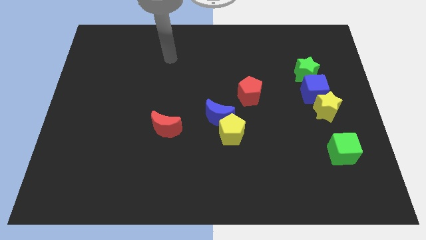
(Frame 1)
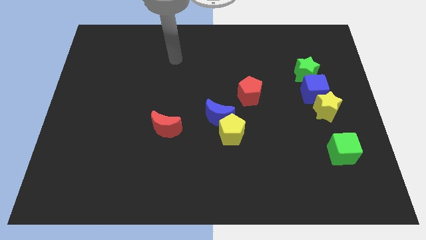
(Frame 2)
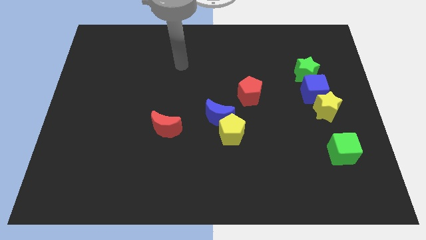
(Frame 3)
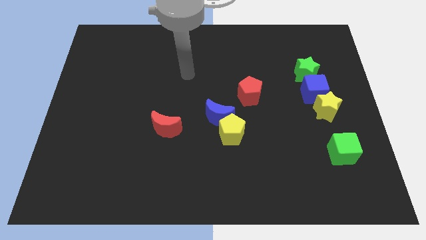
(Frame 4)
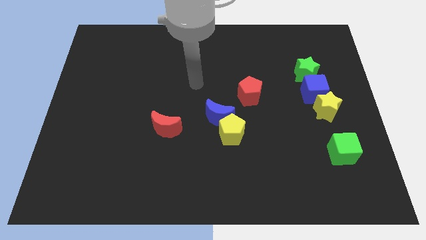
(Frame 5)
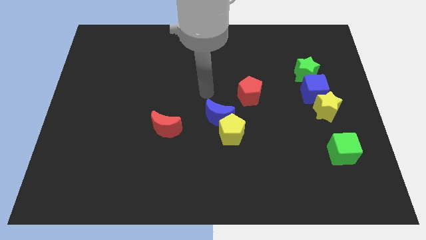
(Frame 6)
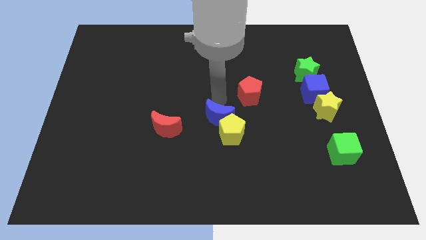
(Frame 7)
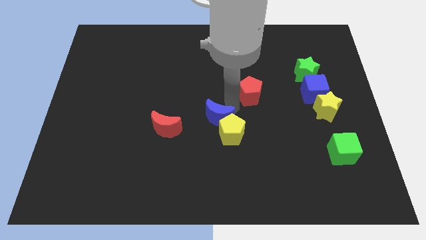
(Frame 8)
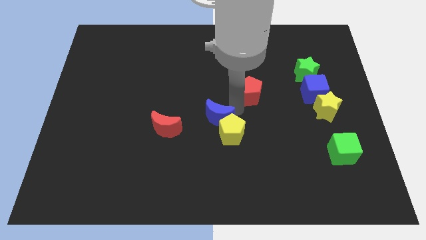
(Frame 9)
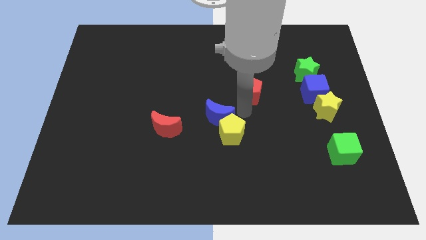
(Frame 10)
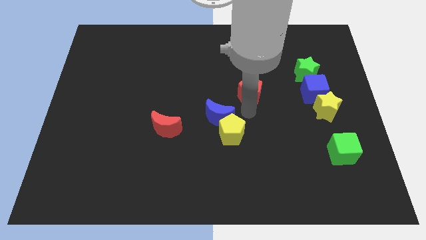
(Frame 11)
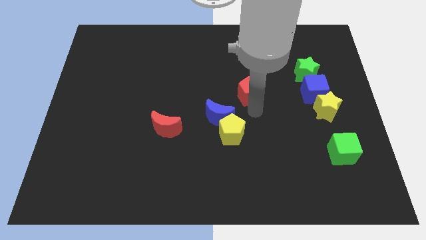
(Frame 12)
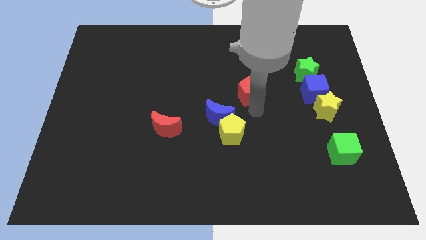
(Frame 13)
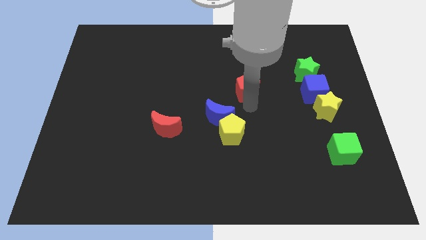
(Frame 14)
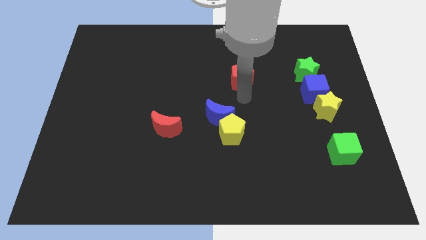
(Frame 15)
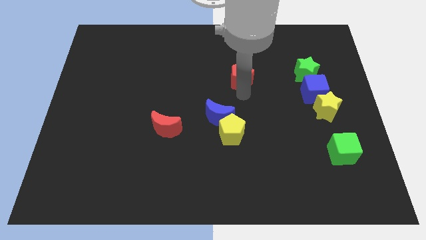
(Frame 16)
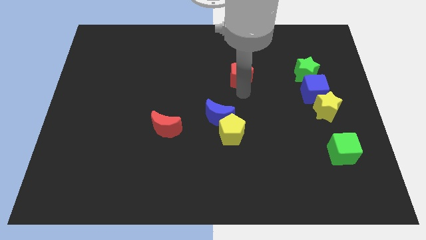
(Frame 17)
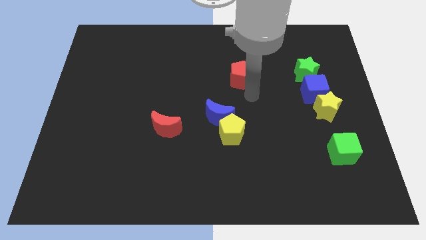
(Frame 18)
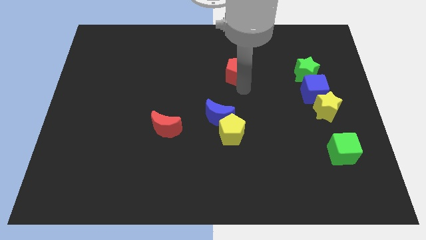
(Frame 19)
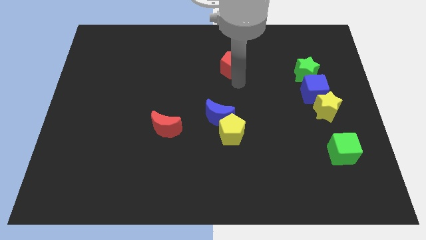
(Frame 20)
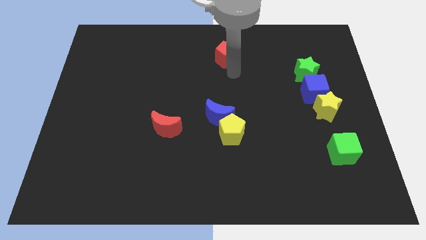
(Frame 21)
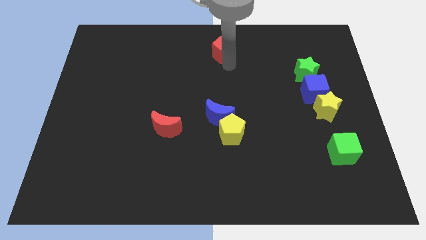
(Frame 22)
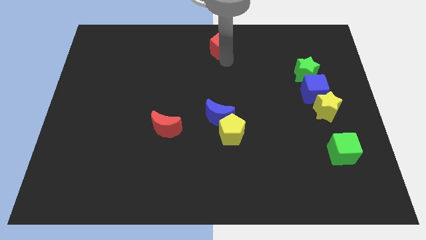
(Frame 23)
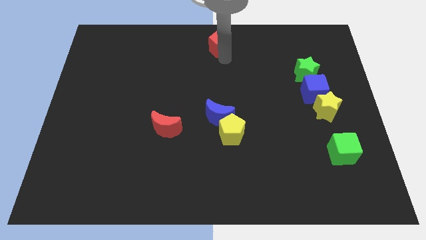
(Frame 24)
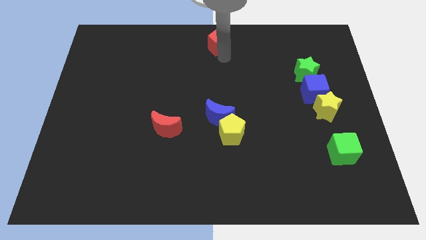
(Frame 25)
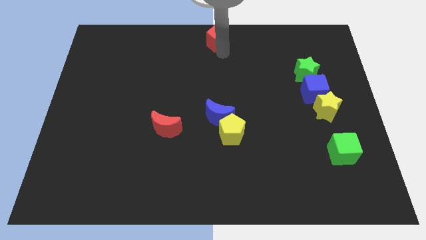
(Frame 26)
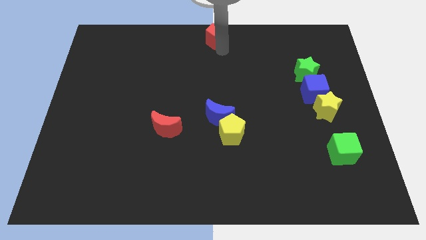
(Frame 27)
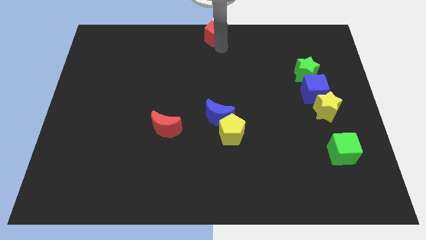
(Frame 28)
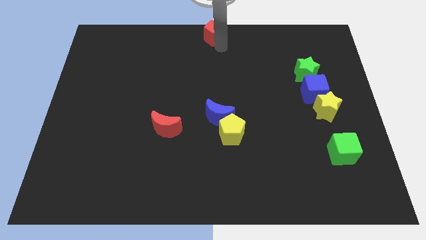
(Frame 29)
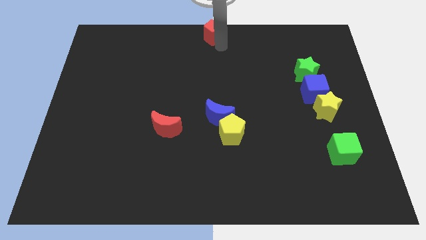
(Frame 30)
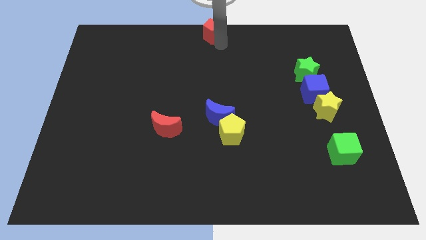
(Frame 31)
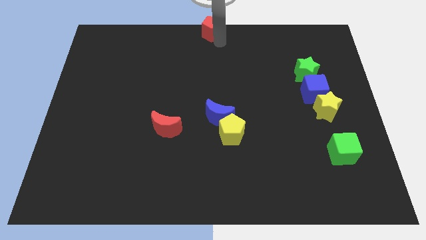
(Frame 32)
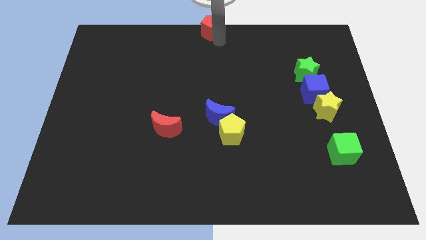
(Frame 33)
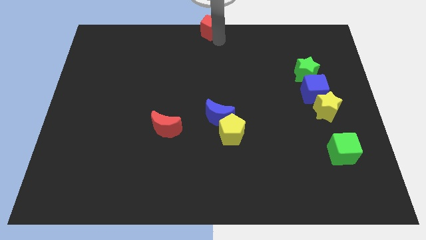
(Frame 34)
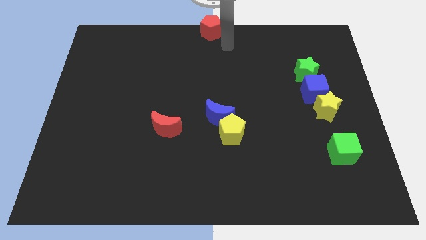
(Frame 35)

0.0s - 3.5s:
place the red pentagon at the top center of the board

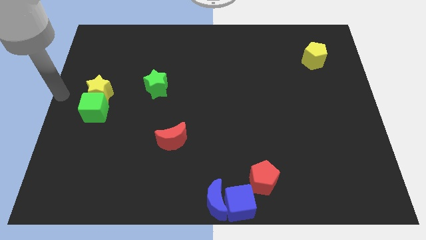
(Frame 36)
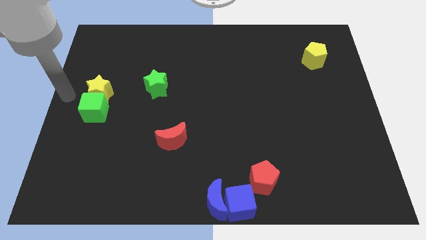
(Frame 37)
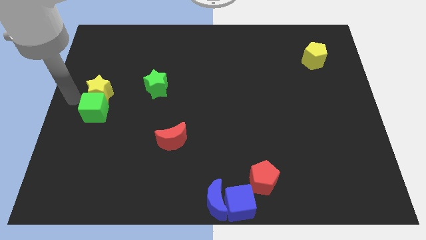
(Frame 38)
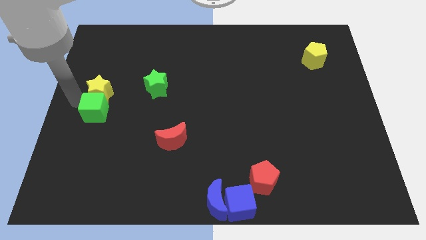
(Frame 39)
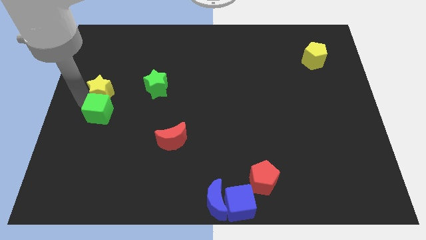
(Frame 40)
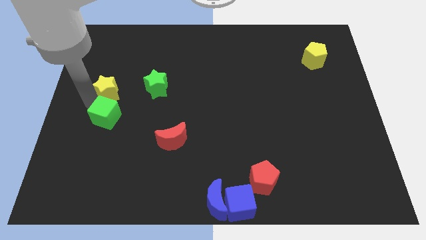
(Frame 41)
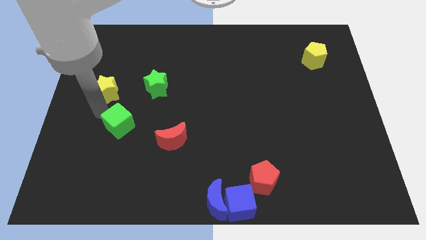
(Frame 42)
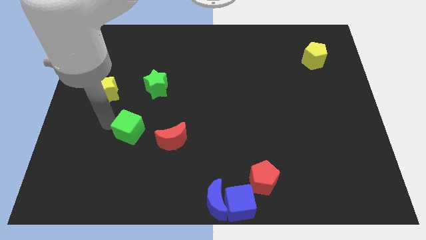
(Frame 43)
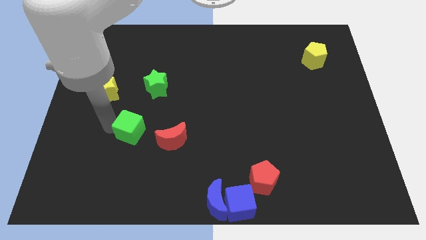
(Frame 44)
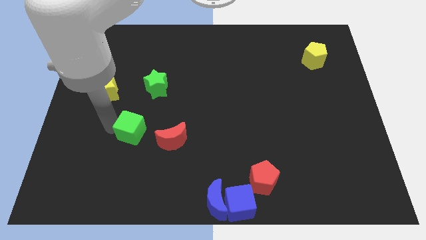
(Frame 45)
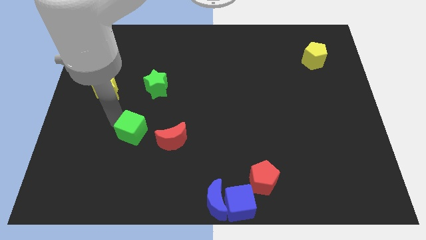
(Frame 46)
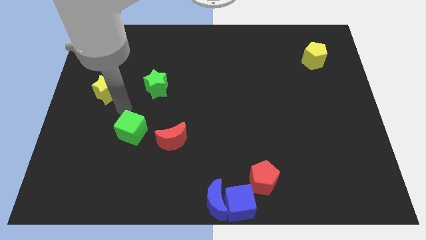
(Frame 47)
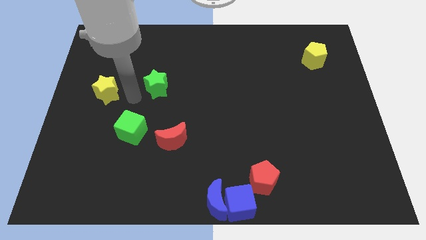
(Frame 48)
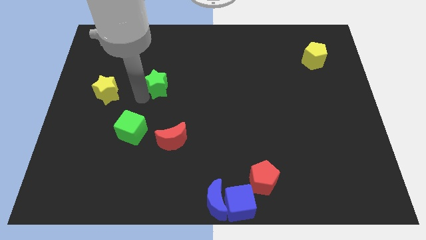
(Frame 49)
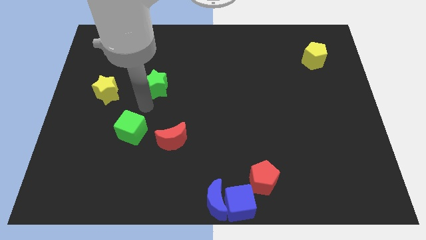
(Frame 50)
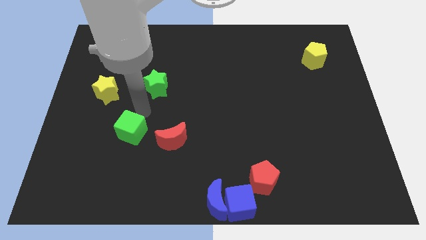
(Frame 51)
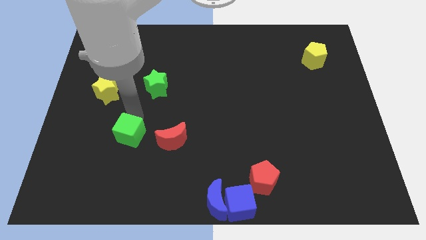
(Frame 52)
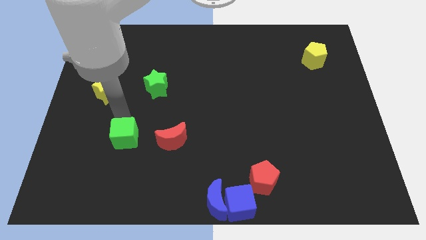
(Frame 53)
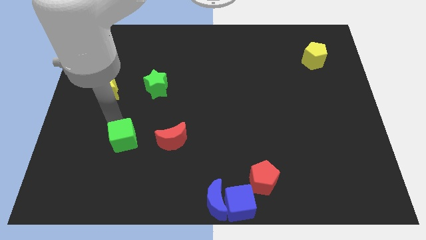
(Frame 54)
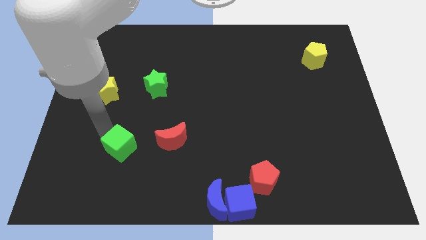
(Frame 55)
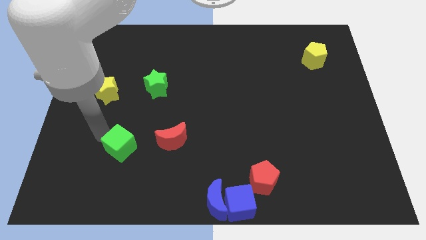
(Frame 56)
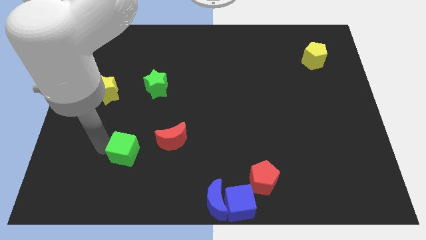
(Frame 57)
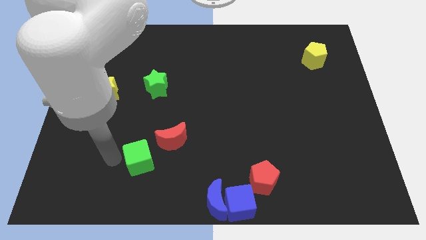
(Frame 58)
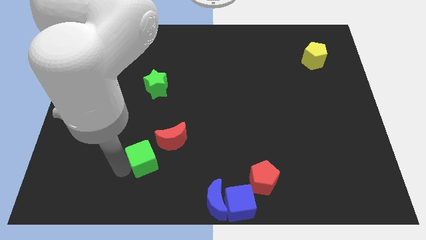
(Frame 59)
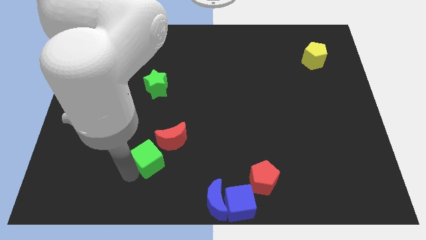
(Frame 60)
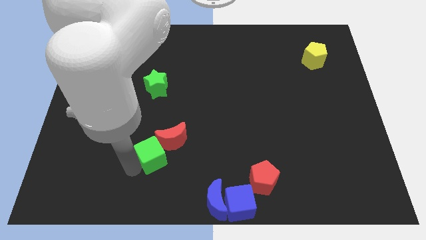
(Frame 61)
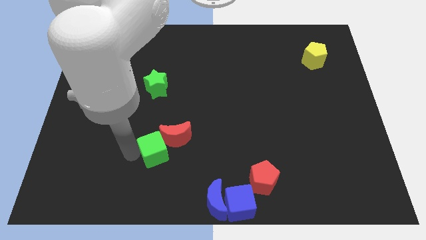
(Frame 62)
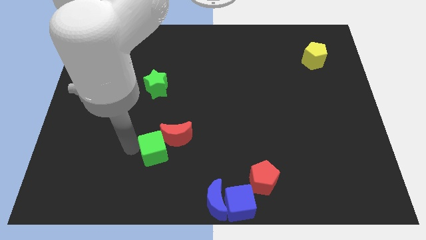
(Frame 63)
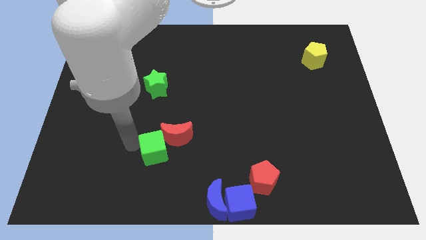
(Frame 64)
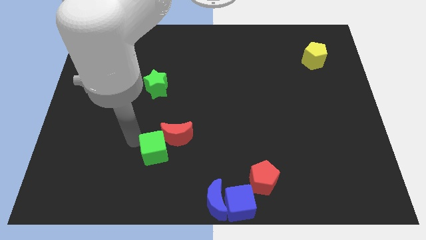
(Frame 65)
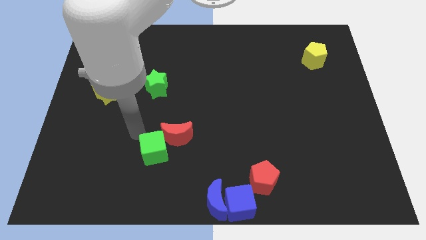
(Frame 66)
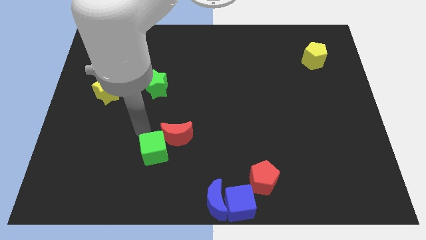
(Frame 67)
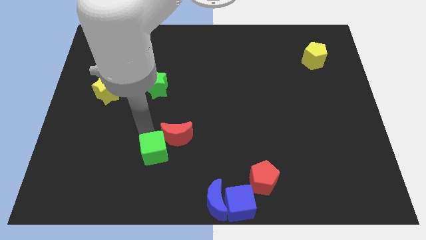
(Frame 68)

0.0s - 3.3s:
move the green cube into the red crescent

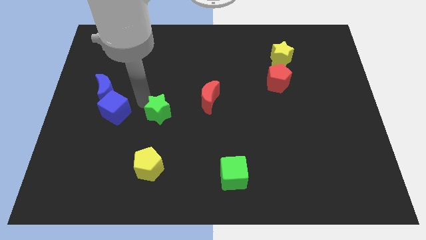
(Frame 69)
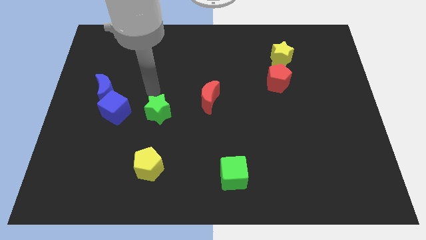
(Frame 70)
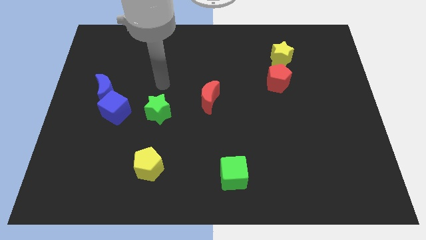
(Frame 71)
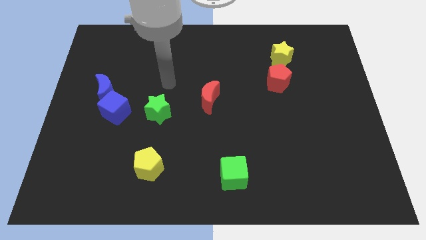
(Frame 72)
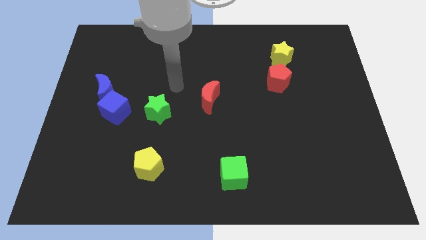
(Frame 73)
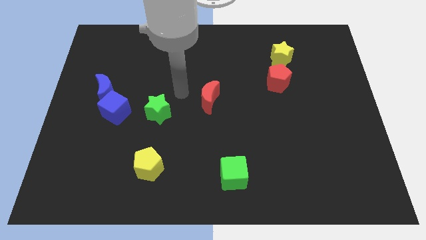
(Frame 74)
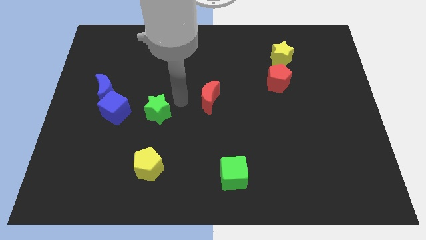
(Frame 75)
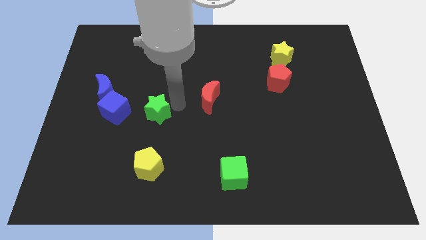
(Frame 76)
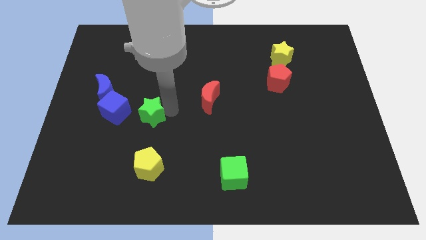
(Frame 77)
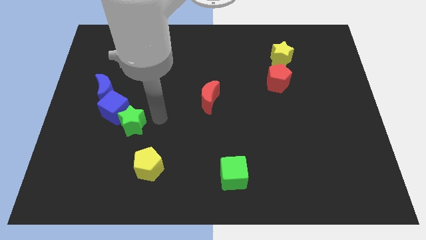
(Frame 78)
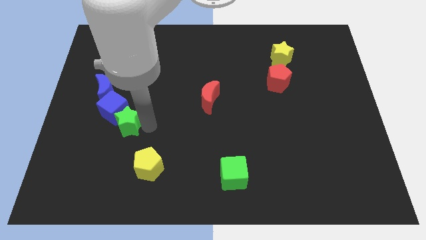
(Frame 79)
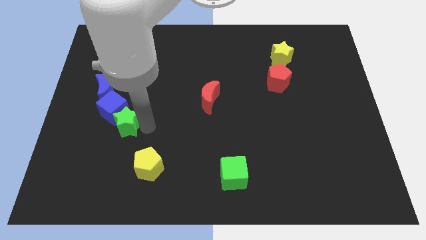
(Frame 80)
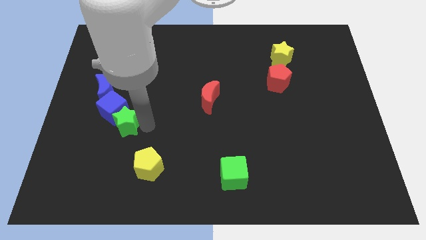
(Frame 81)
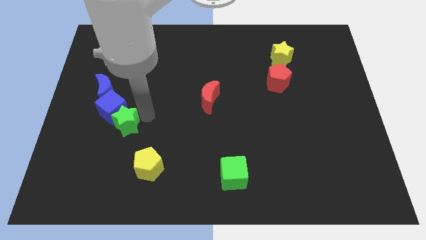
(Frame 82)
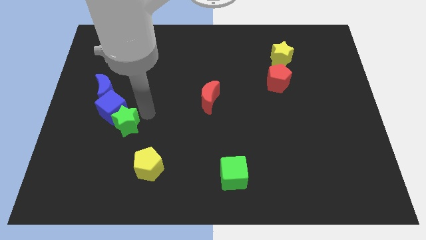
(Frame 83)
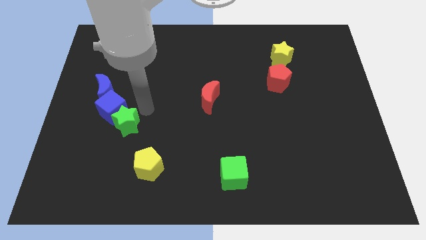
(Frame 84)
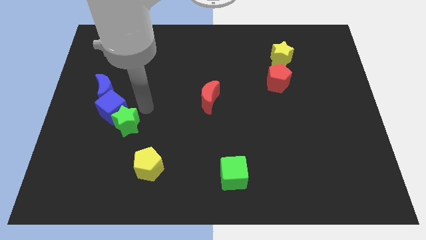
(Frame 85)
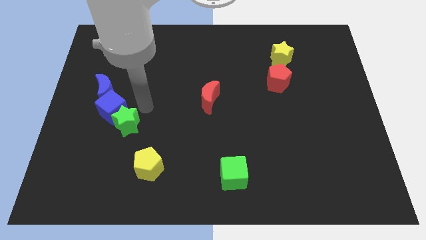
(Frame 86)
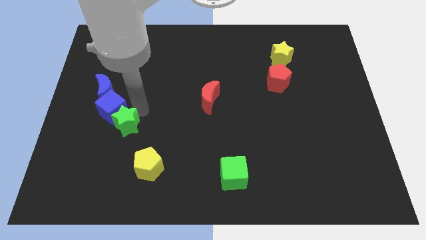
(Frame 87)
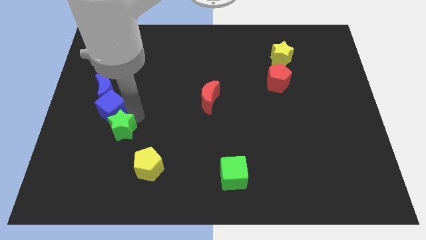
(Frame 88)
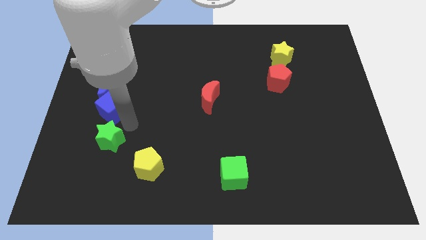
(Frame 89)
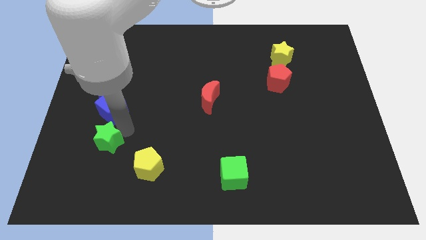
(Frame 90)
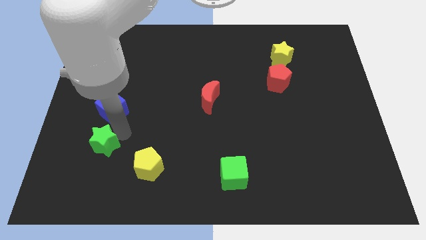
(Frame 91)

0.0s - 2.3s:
push the green star below the blue cube
